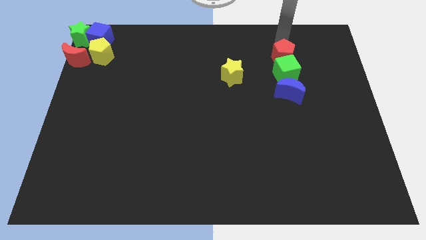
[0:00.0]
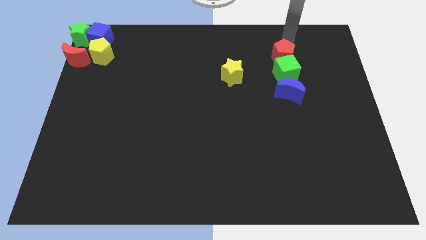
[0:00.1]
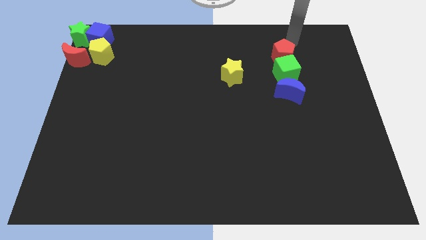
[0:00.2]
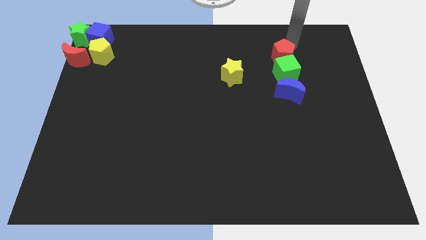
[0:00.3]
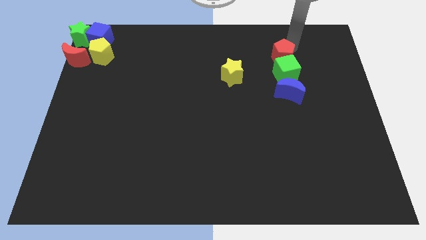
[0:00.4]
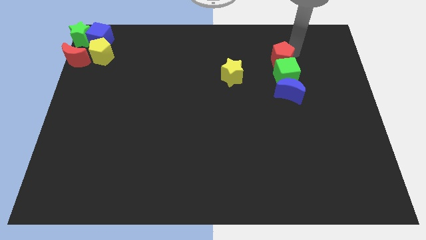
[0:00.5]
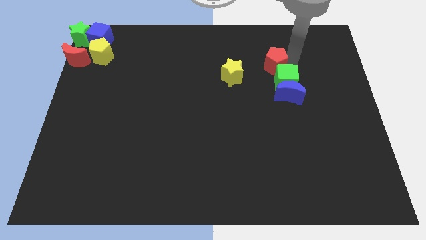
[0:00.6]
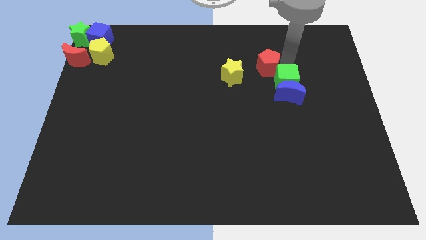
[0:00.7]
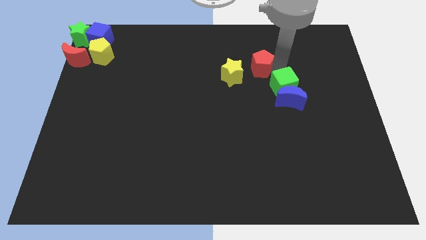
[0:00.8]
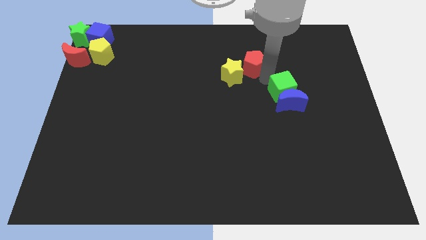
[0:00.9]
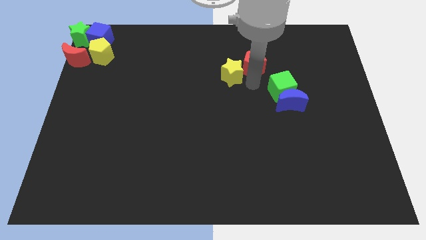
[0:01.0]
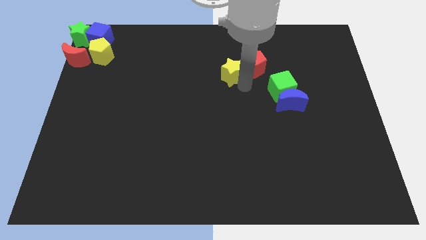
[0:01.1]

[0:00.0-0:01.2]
separate the green cube and the red pentagon from each other

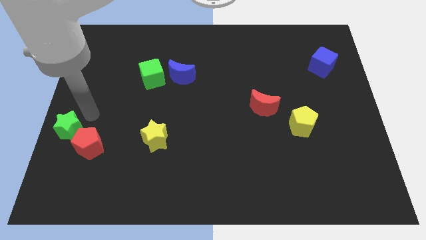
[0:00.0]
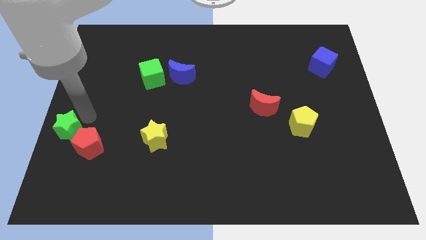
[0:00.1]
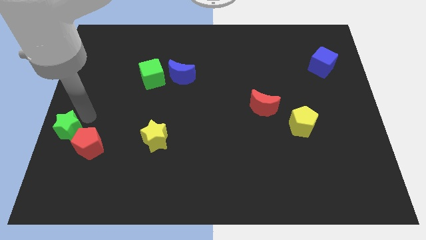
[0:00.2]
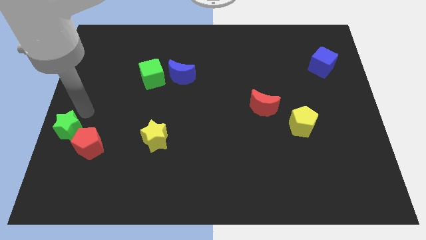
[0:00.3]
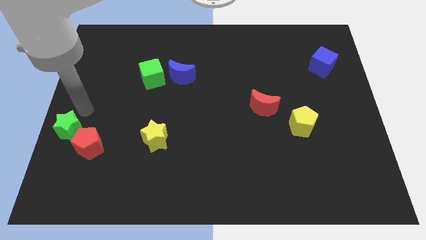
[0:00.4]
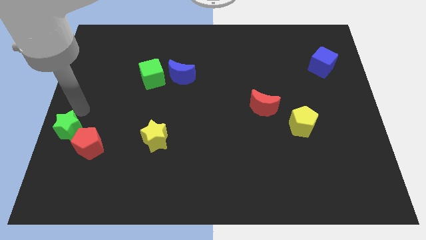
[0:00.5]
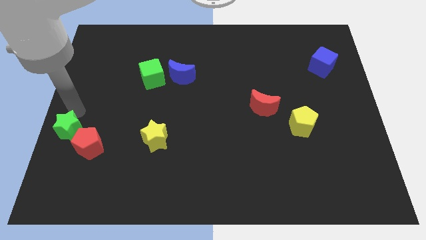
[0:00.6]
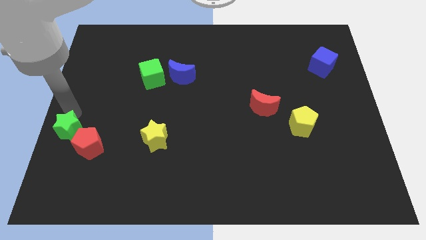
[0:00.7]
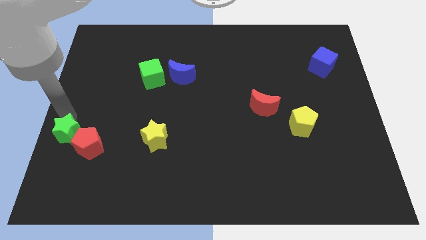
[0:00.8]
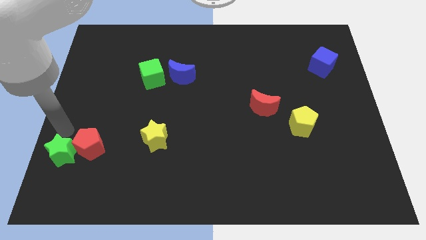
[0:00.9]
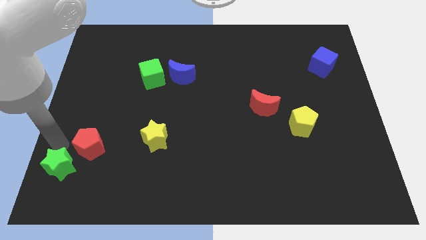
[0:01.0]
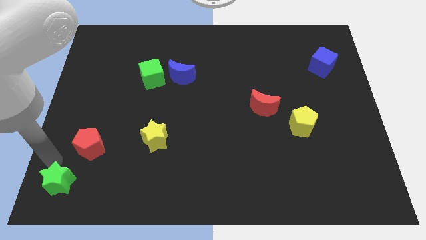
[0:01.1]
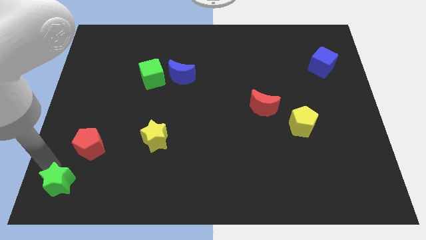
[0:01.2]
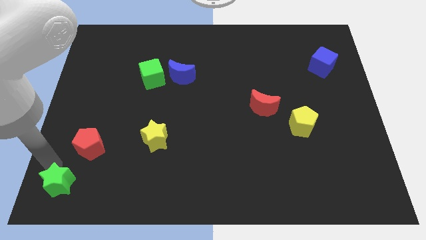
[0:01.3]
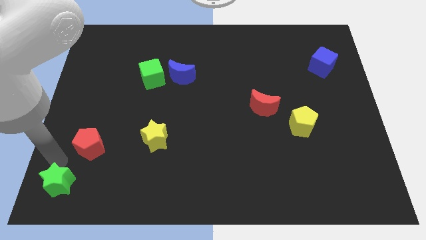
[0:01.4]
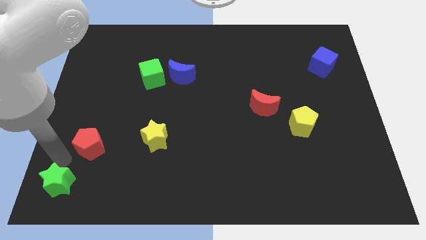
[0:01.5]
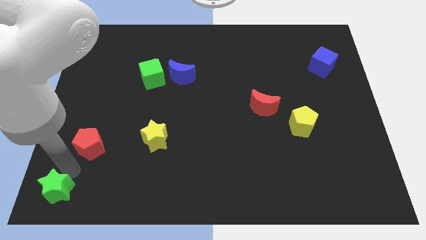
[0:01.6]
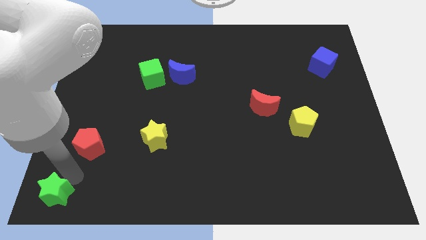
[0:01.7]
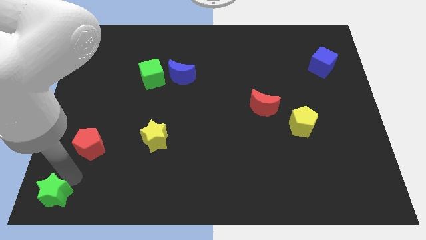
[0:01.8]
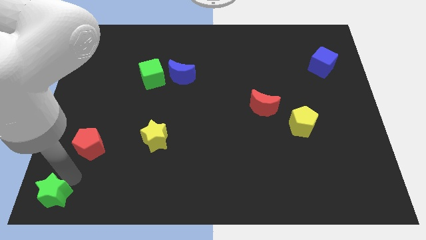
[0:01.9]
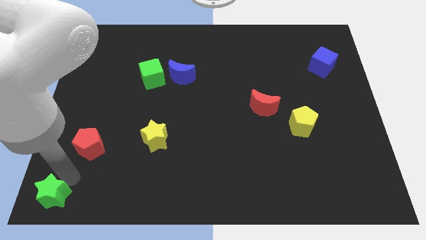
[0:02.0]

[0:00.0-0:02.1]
move the green star to the bottom left

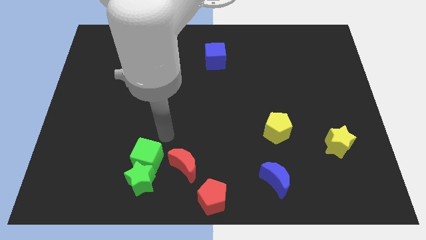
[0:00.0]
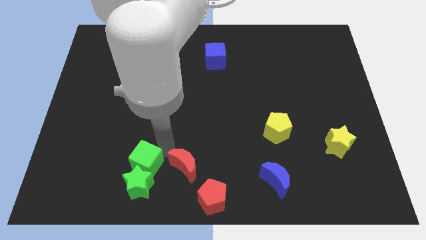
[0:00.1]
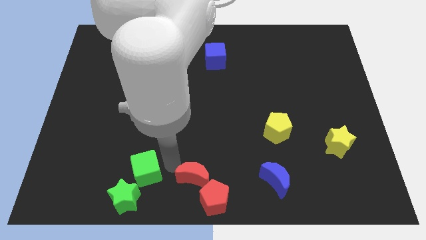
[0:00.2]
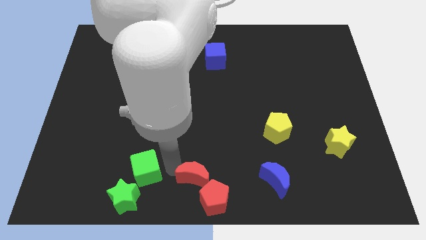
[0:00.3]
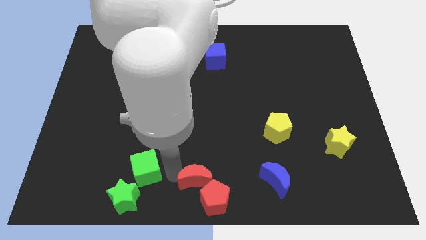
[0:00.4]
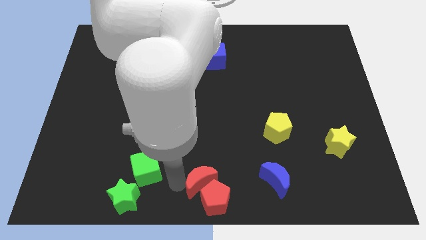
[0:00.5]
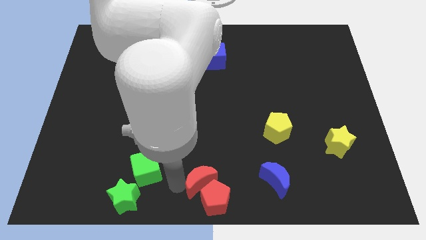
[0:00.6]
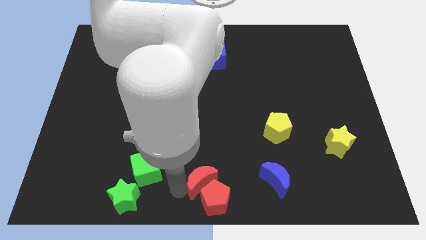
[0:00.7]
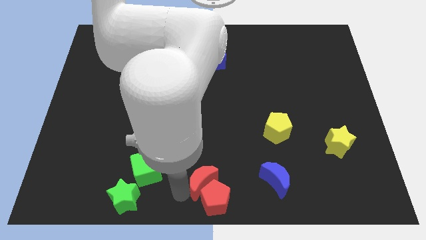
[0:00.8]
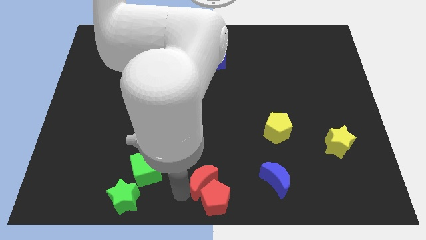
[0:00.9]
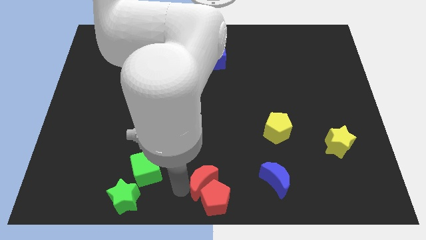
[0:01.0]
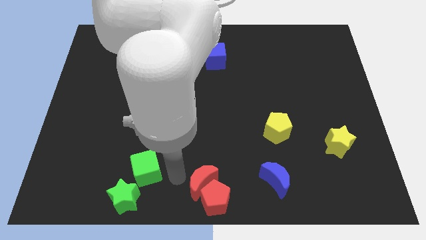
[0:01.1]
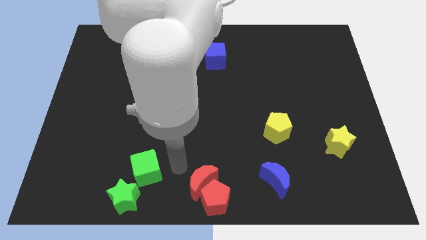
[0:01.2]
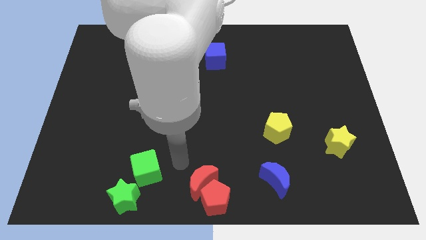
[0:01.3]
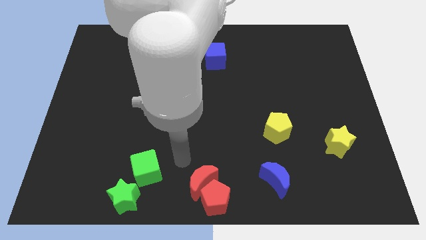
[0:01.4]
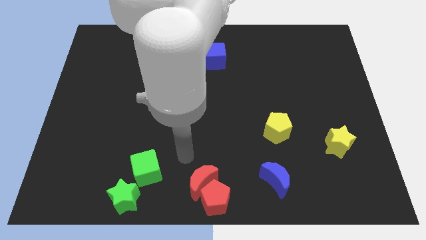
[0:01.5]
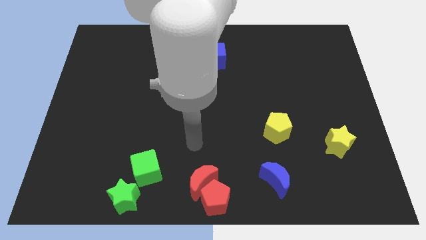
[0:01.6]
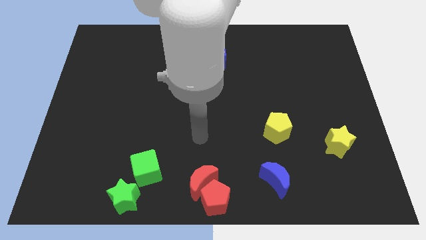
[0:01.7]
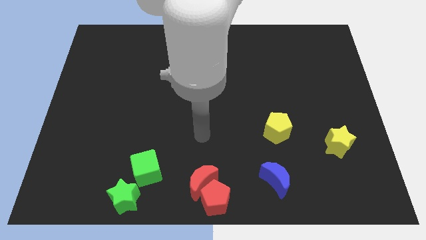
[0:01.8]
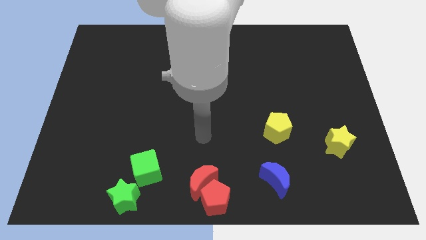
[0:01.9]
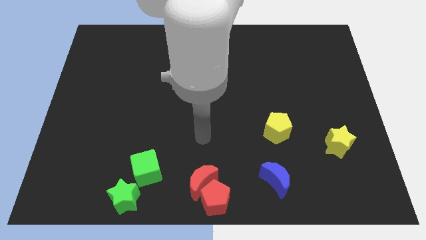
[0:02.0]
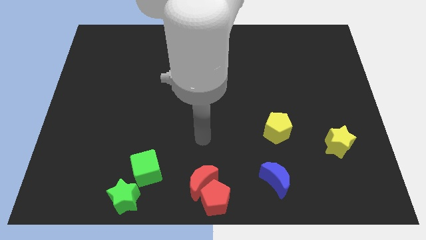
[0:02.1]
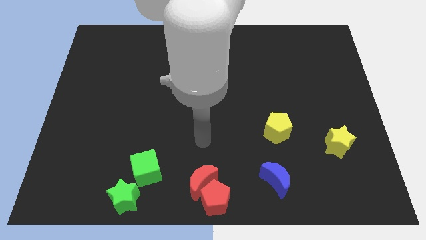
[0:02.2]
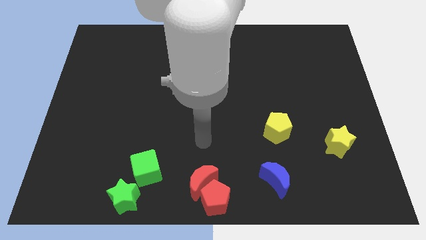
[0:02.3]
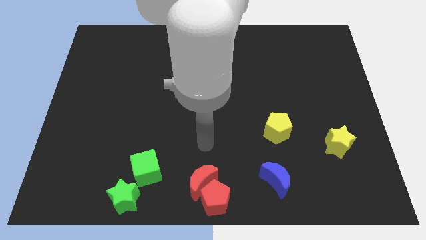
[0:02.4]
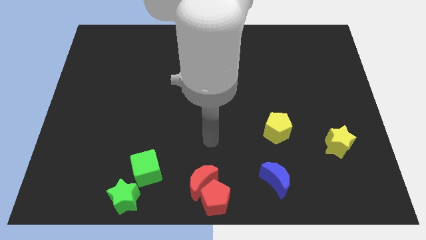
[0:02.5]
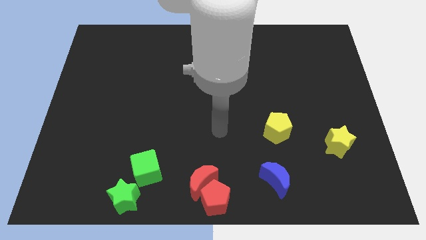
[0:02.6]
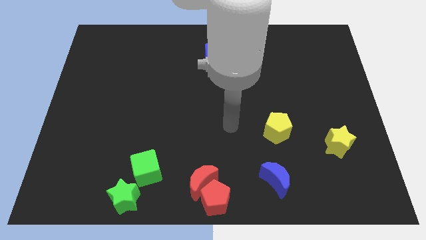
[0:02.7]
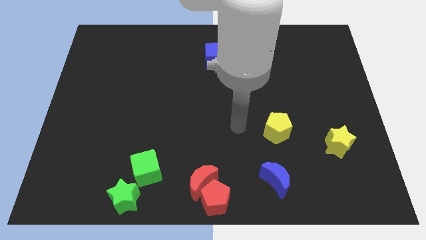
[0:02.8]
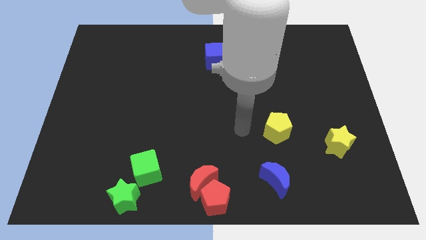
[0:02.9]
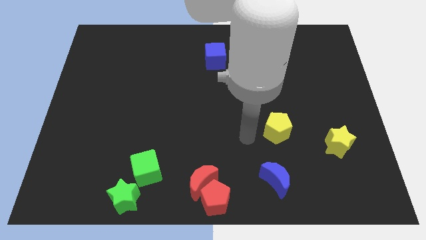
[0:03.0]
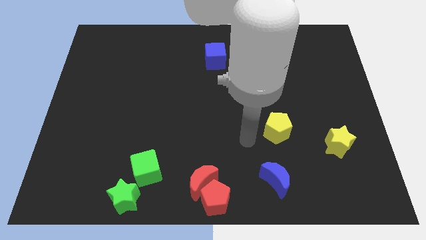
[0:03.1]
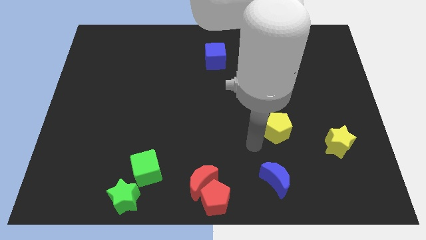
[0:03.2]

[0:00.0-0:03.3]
separate the red blocks and the green blocks

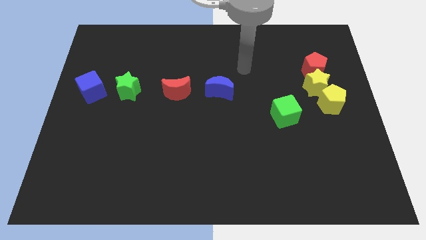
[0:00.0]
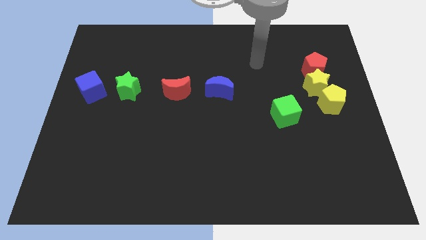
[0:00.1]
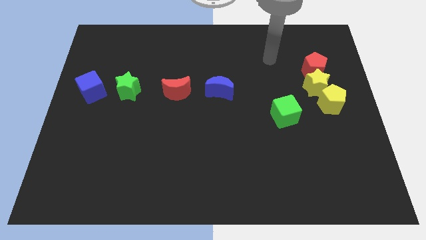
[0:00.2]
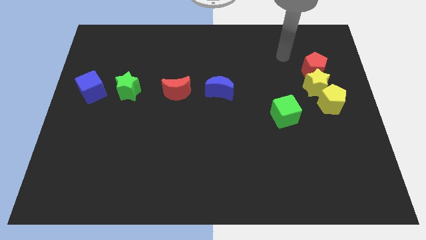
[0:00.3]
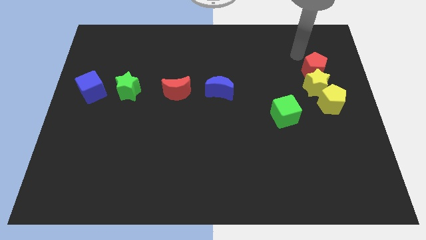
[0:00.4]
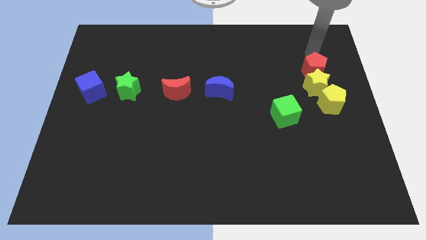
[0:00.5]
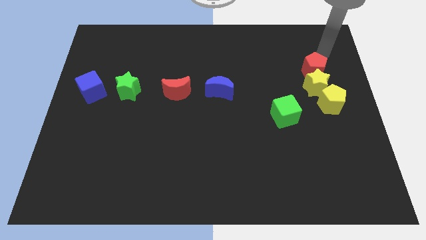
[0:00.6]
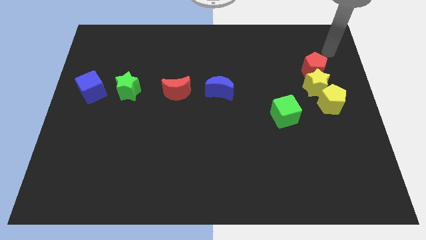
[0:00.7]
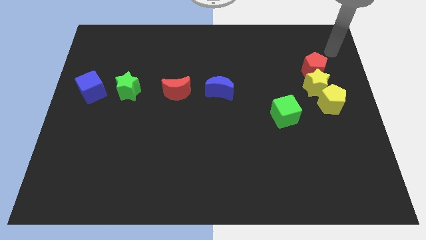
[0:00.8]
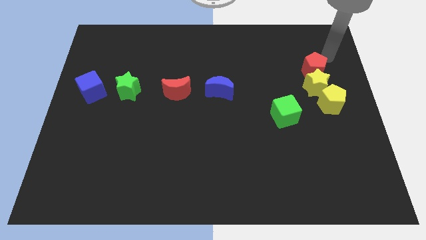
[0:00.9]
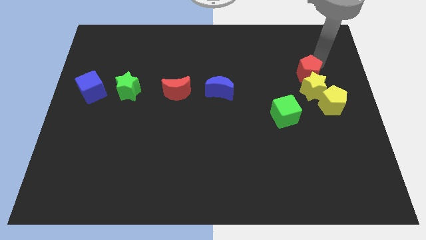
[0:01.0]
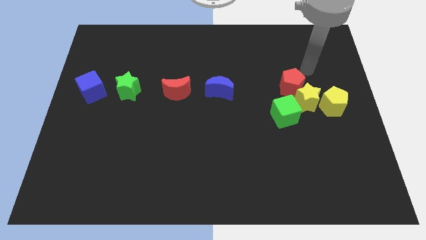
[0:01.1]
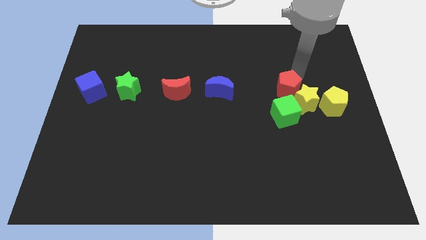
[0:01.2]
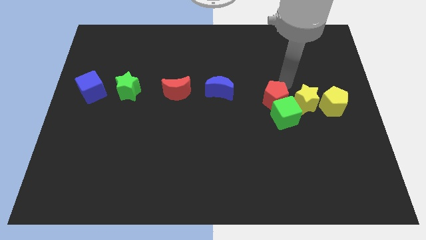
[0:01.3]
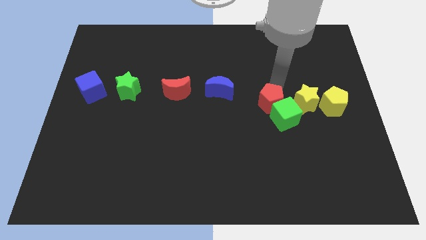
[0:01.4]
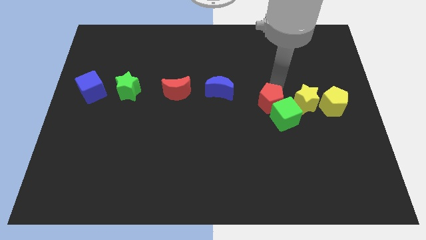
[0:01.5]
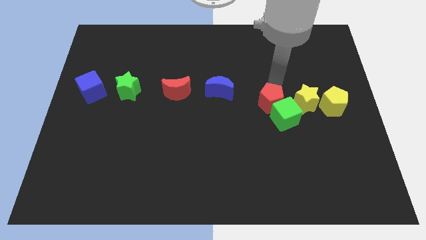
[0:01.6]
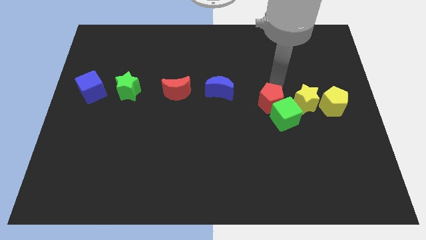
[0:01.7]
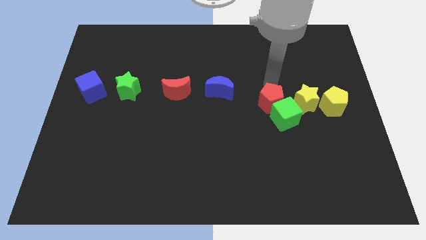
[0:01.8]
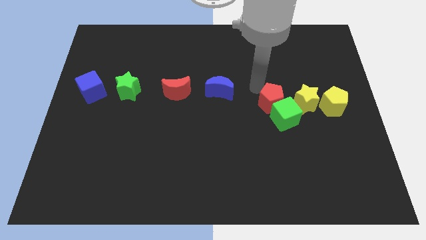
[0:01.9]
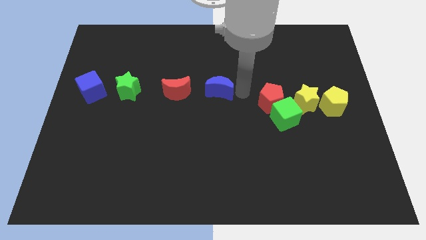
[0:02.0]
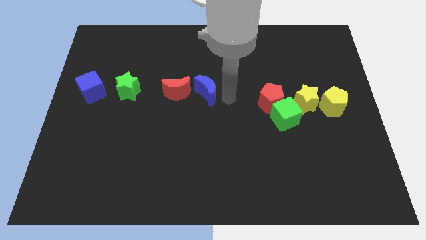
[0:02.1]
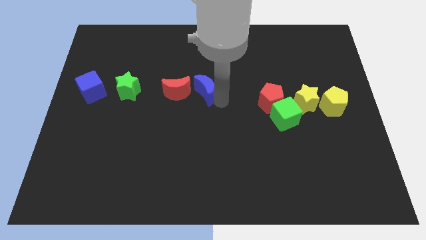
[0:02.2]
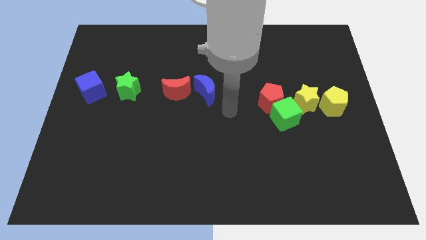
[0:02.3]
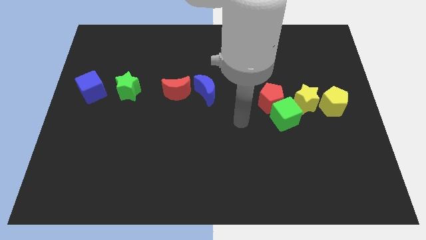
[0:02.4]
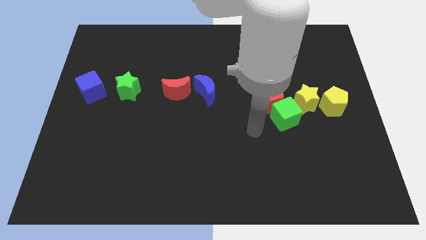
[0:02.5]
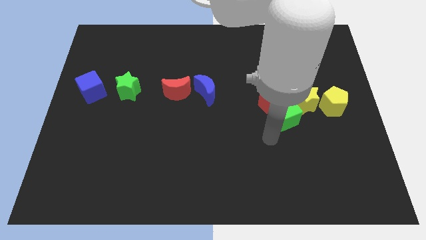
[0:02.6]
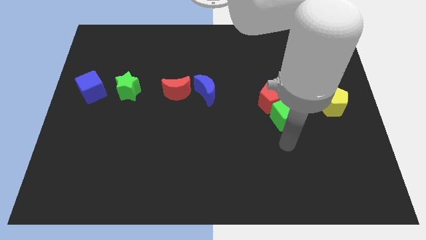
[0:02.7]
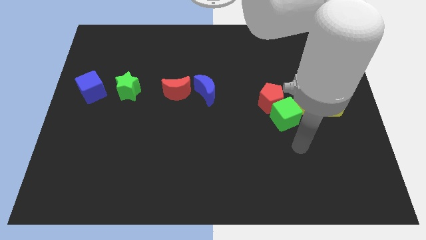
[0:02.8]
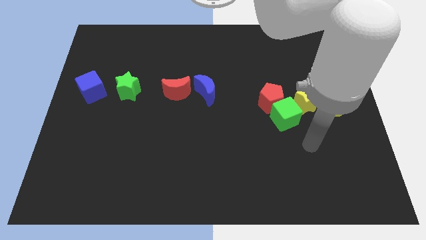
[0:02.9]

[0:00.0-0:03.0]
separate red pentagon from the yellow star
